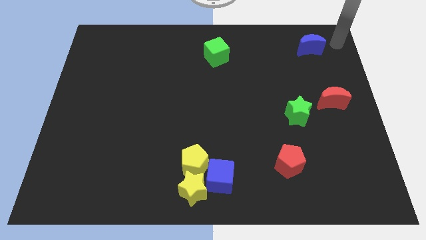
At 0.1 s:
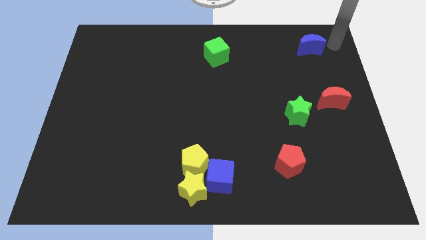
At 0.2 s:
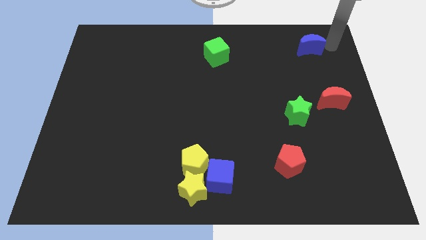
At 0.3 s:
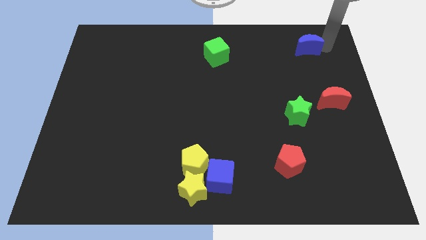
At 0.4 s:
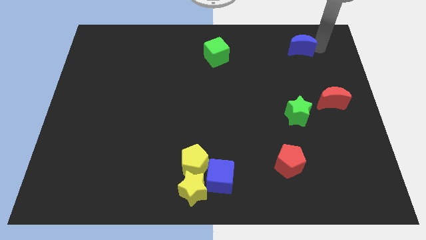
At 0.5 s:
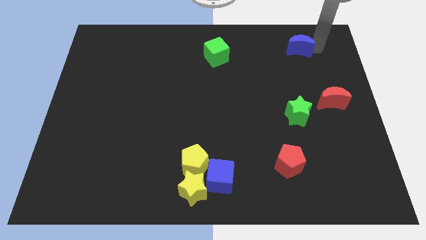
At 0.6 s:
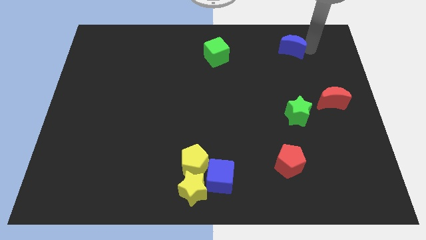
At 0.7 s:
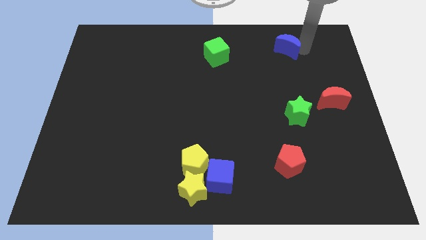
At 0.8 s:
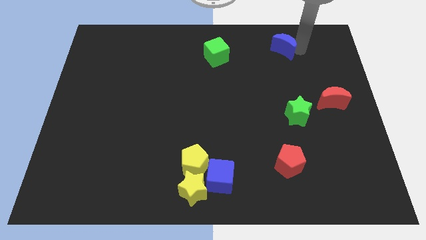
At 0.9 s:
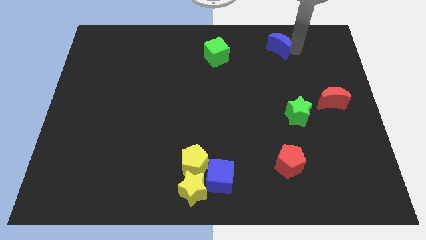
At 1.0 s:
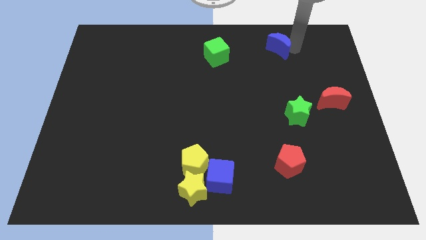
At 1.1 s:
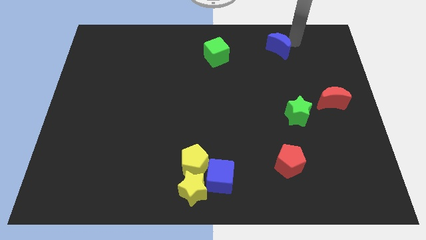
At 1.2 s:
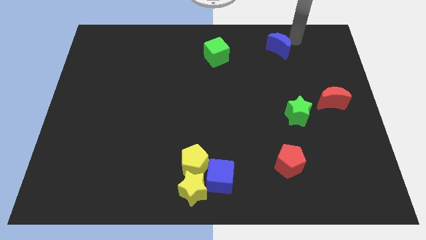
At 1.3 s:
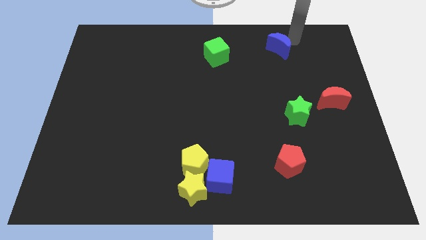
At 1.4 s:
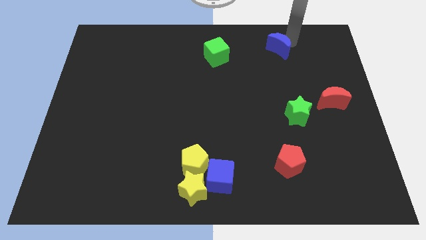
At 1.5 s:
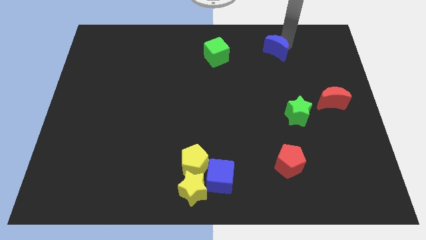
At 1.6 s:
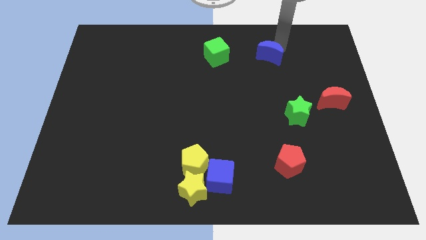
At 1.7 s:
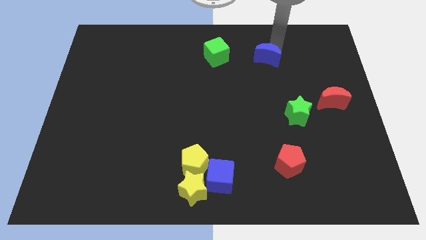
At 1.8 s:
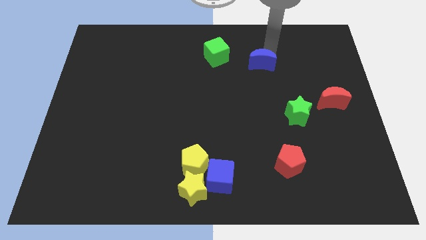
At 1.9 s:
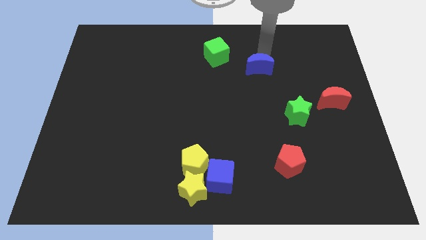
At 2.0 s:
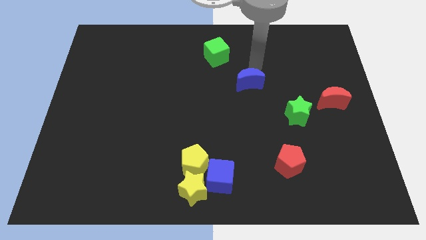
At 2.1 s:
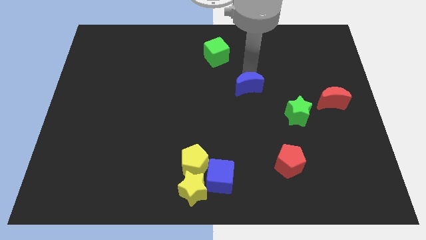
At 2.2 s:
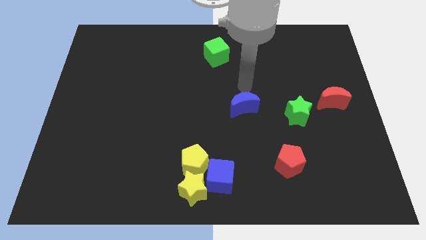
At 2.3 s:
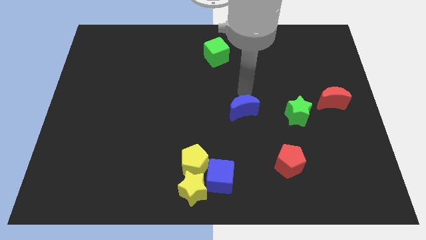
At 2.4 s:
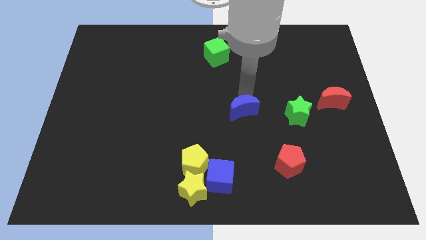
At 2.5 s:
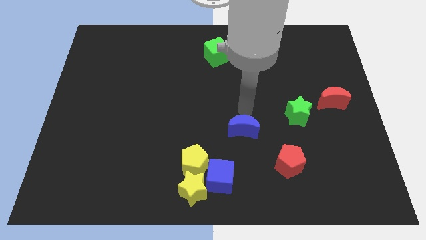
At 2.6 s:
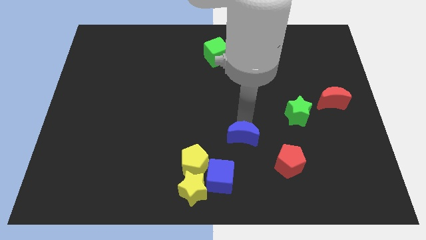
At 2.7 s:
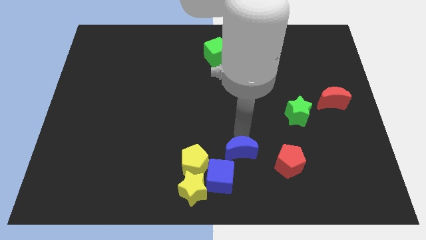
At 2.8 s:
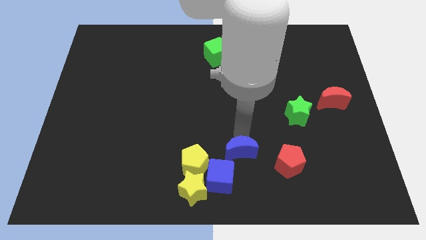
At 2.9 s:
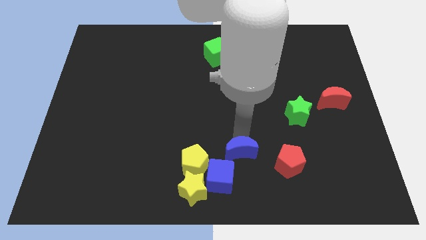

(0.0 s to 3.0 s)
place the blue moon at the top right side of blue cube

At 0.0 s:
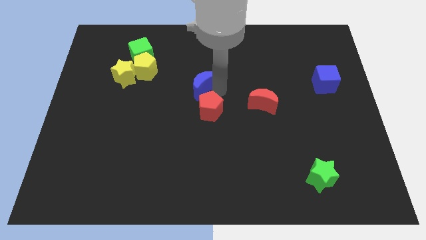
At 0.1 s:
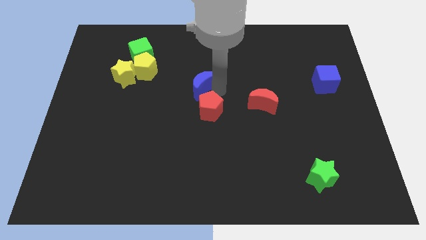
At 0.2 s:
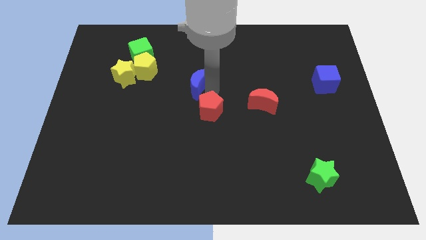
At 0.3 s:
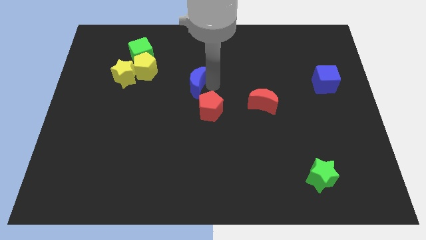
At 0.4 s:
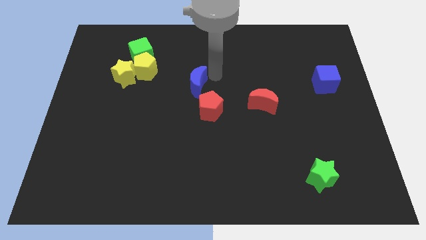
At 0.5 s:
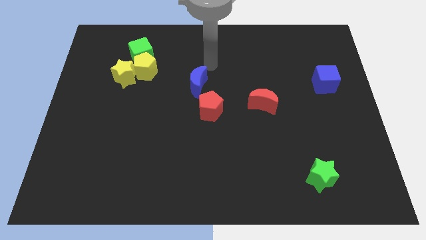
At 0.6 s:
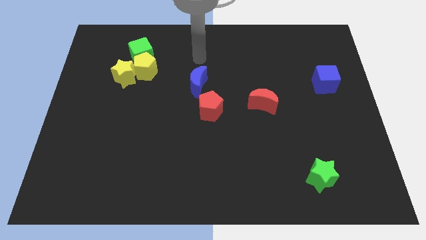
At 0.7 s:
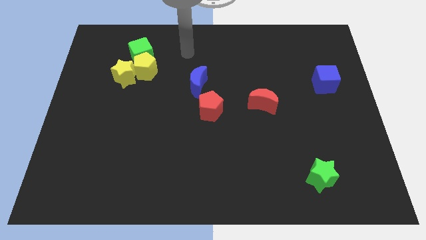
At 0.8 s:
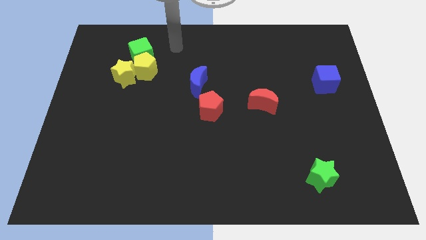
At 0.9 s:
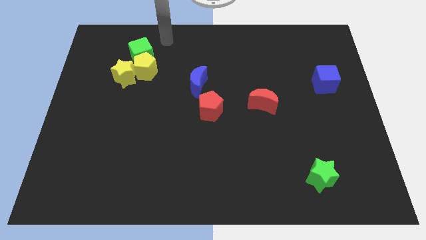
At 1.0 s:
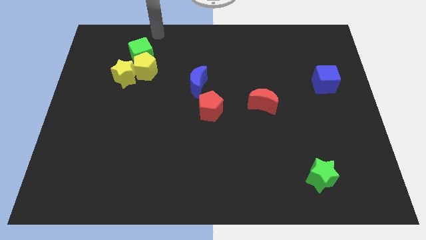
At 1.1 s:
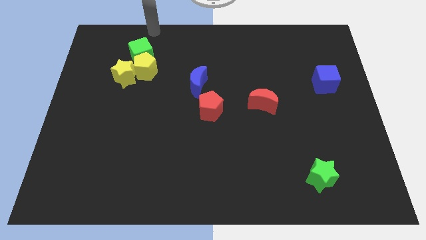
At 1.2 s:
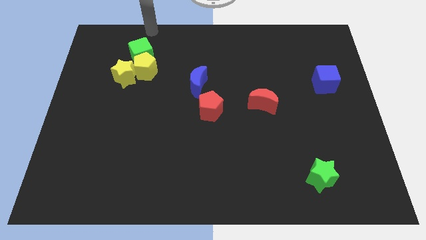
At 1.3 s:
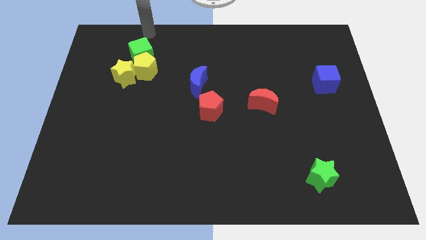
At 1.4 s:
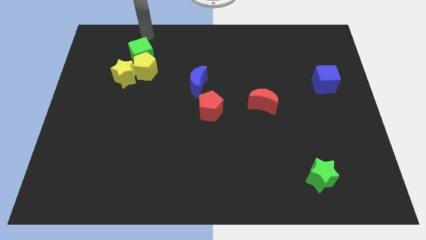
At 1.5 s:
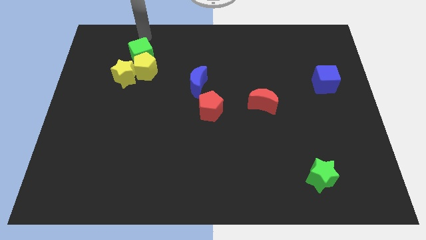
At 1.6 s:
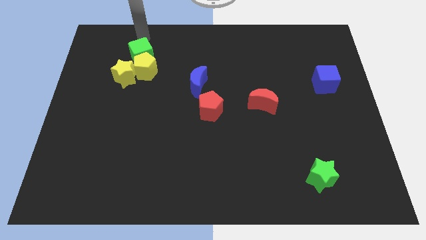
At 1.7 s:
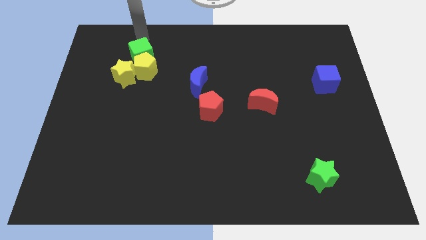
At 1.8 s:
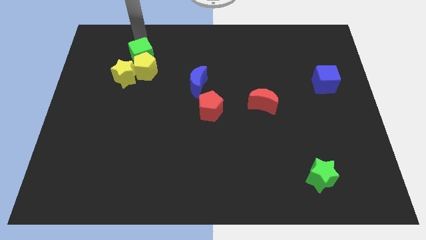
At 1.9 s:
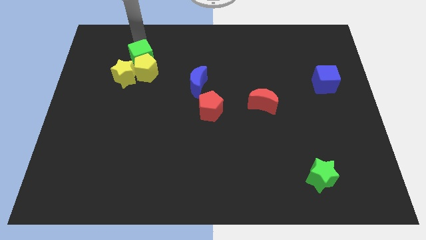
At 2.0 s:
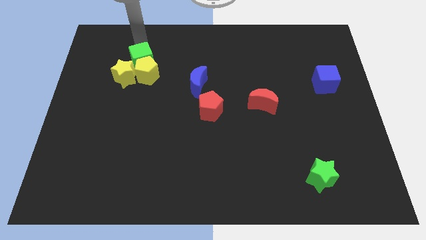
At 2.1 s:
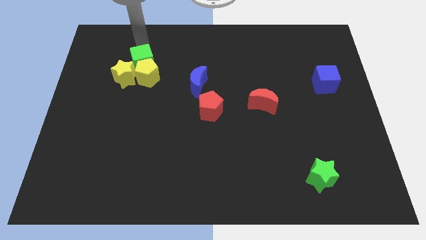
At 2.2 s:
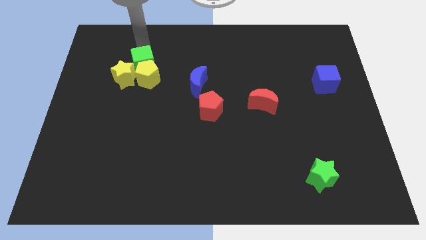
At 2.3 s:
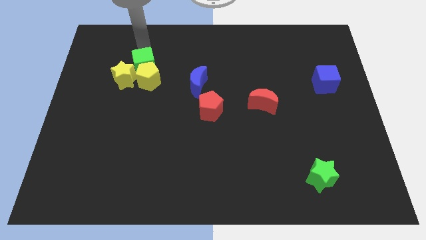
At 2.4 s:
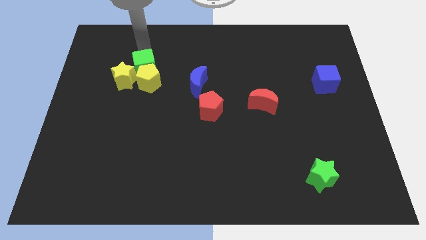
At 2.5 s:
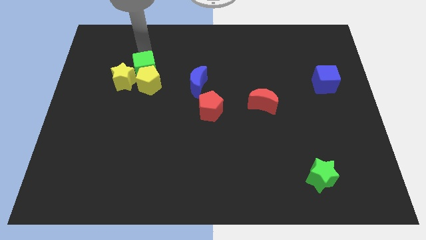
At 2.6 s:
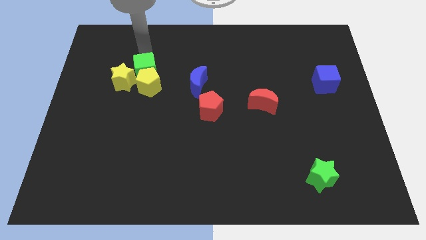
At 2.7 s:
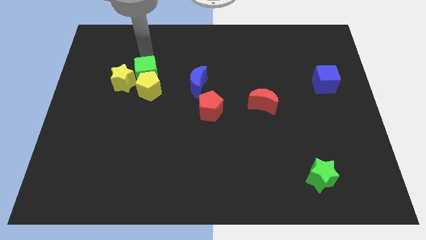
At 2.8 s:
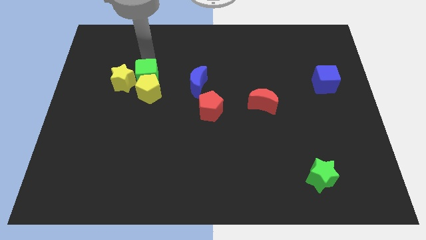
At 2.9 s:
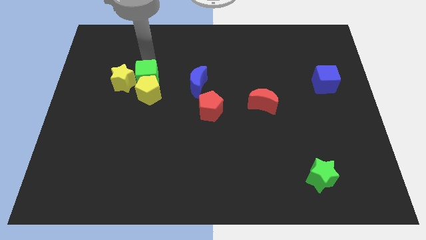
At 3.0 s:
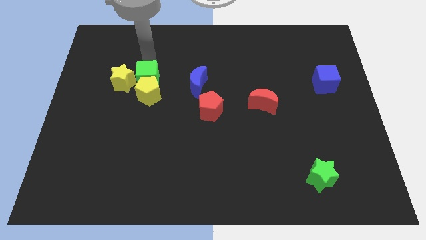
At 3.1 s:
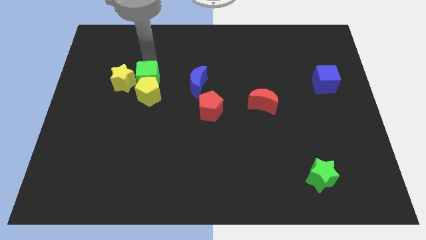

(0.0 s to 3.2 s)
push the yellow pentagon with the green cube towards the bottom center of the board

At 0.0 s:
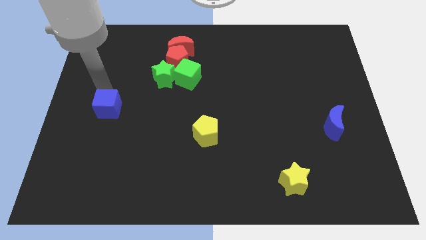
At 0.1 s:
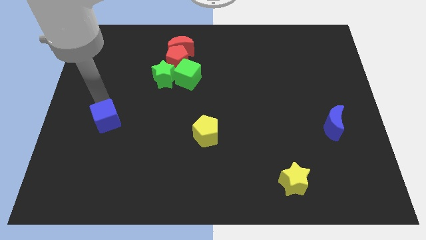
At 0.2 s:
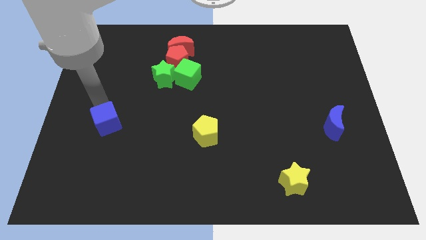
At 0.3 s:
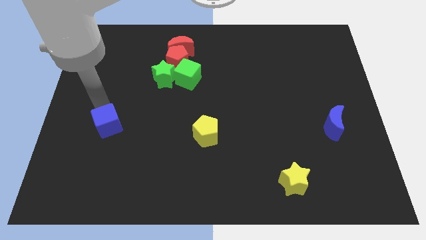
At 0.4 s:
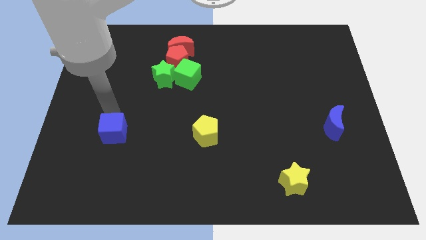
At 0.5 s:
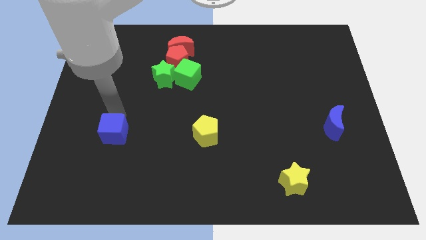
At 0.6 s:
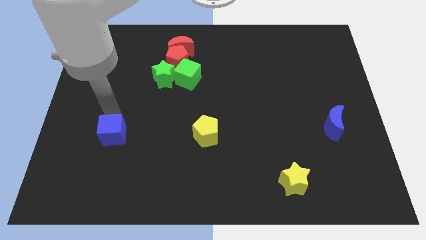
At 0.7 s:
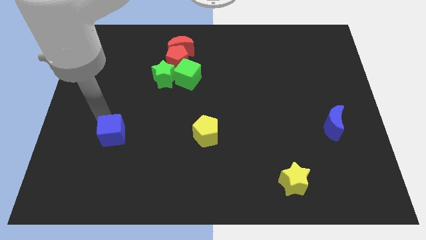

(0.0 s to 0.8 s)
push the blue cube to the bottom side of the board

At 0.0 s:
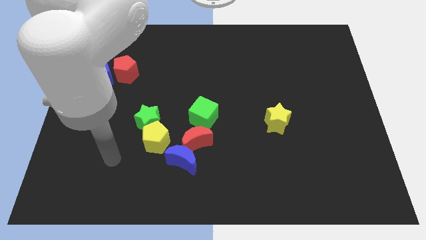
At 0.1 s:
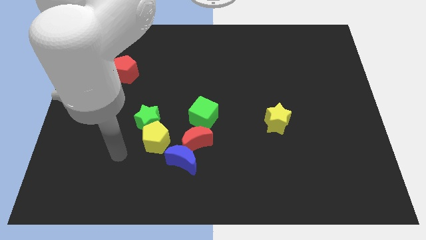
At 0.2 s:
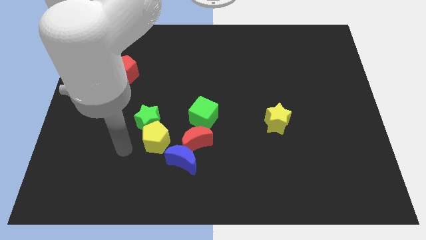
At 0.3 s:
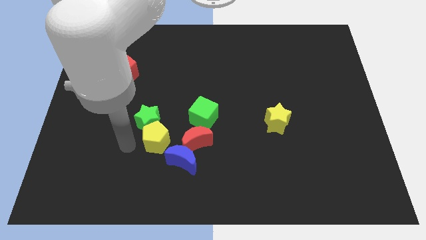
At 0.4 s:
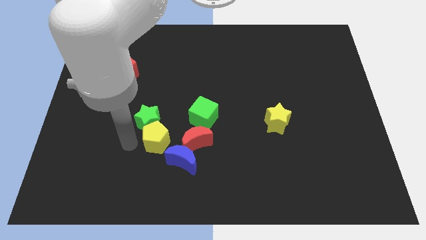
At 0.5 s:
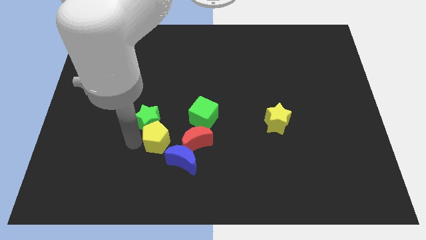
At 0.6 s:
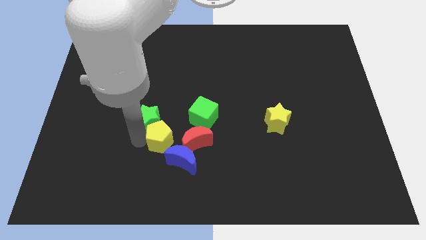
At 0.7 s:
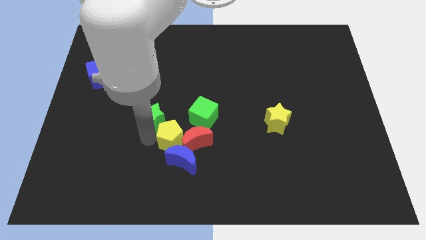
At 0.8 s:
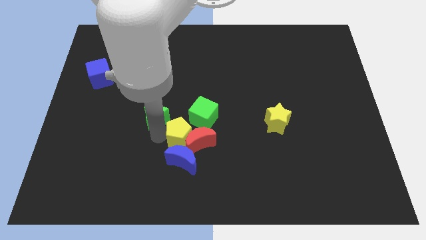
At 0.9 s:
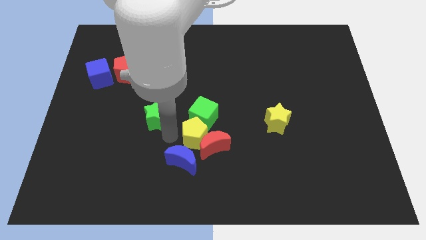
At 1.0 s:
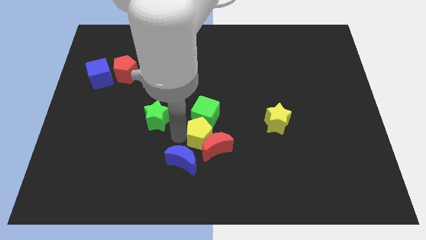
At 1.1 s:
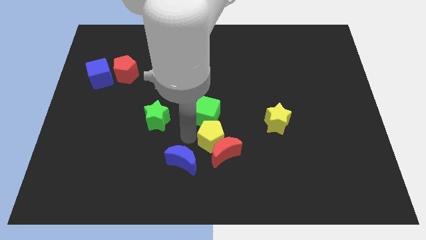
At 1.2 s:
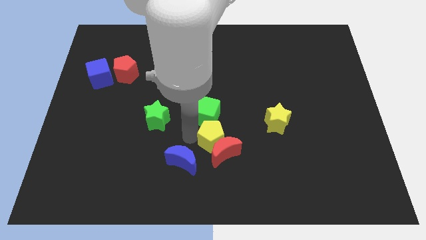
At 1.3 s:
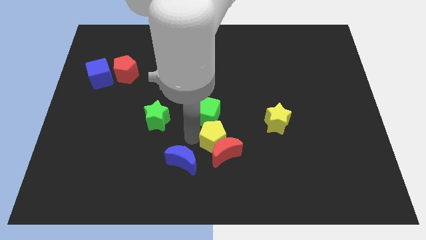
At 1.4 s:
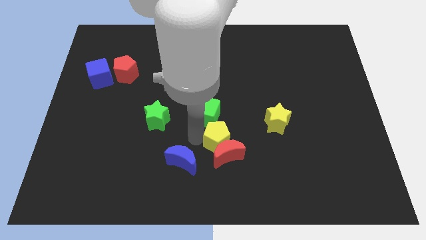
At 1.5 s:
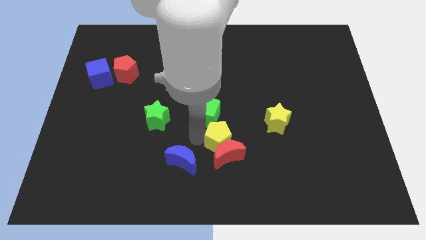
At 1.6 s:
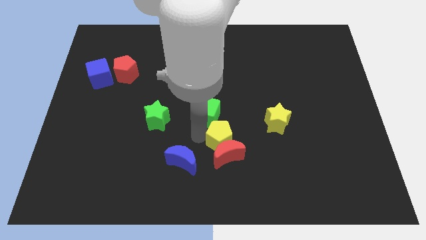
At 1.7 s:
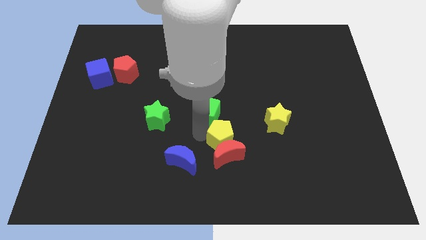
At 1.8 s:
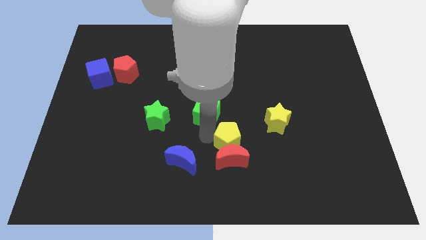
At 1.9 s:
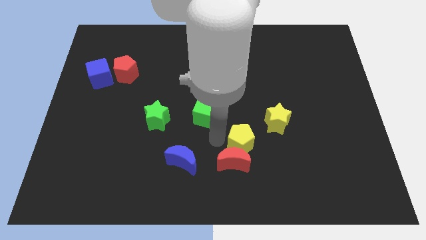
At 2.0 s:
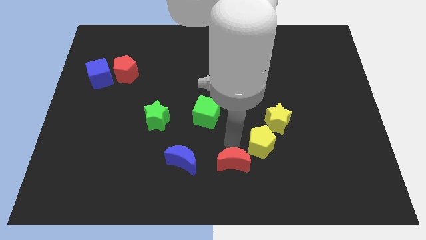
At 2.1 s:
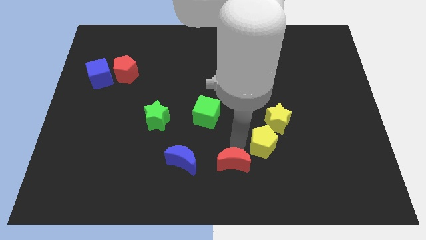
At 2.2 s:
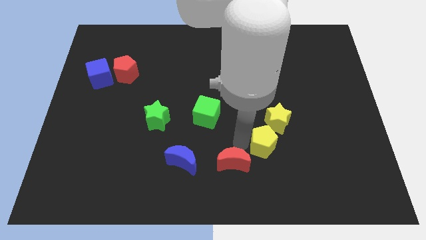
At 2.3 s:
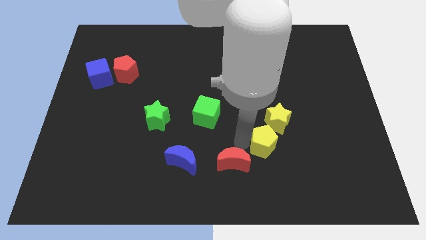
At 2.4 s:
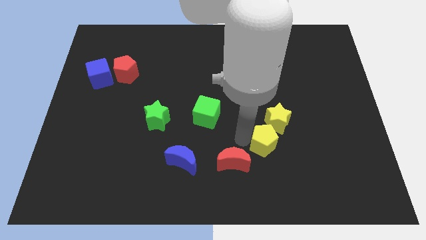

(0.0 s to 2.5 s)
move yellow pentagon in between yellow star and red moon
